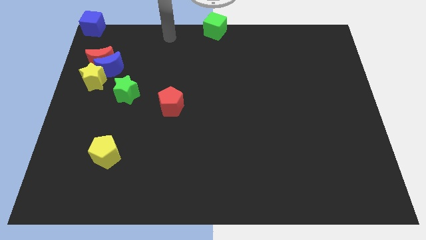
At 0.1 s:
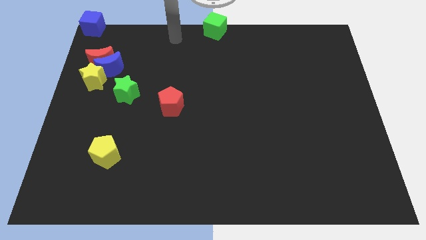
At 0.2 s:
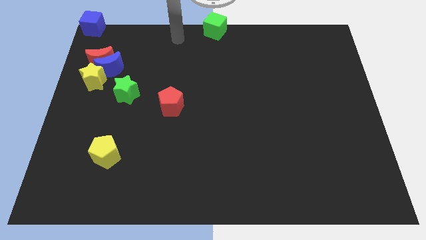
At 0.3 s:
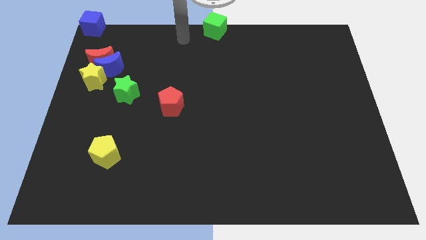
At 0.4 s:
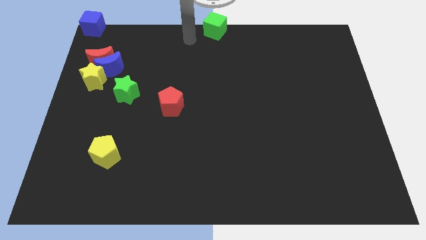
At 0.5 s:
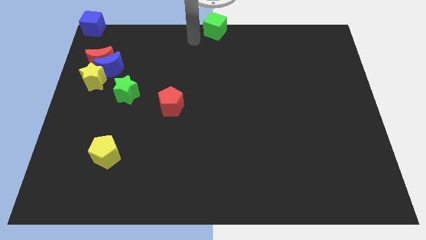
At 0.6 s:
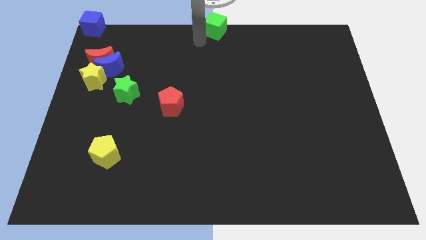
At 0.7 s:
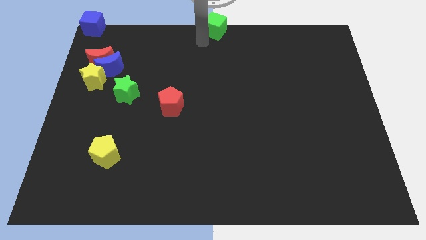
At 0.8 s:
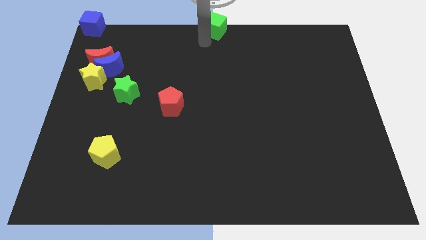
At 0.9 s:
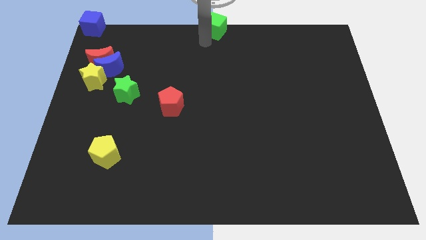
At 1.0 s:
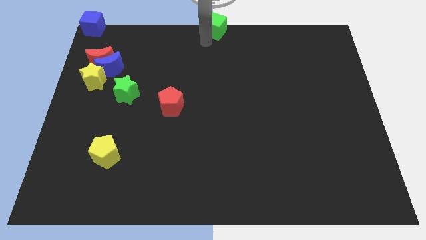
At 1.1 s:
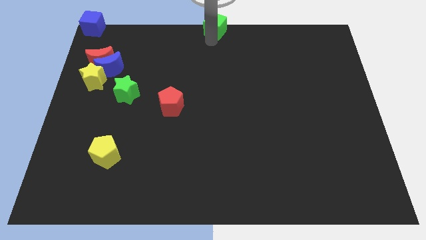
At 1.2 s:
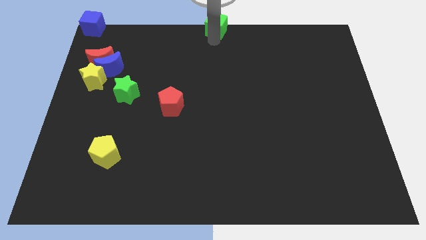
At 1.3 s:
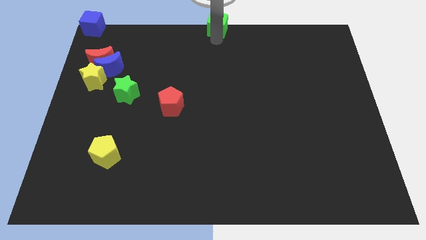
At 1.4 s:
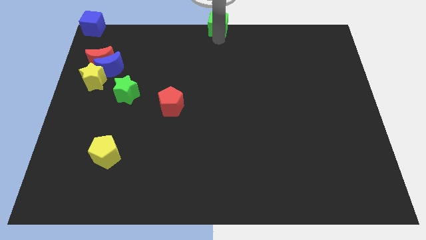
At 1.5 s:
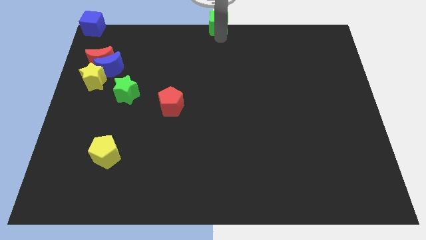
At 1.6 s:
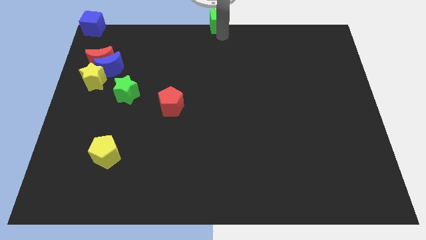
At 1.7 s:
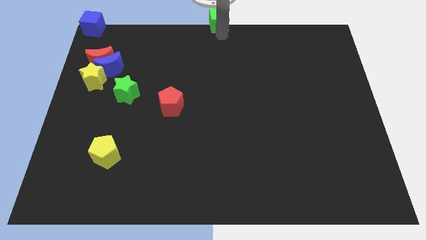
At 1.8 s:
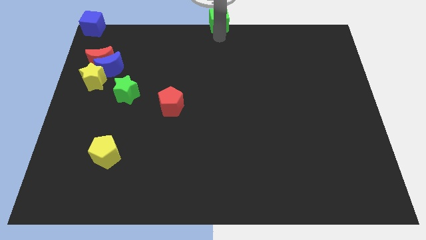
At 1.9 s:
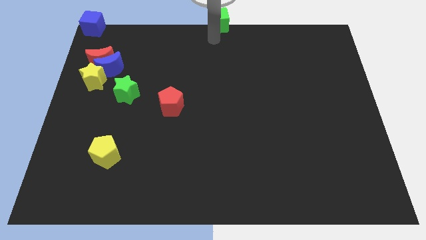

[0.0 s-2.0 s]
touch your arm to the green cube

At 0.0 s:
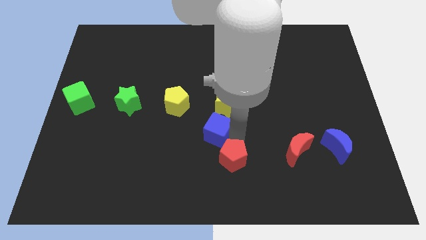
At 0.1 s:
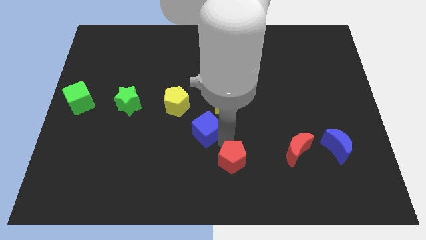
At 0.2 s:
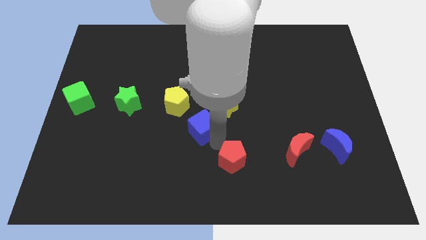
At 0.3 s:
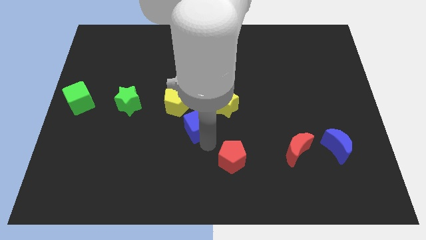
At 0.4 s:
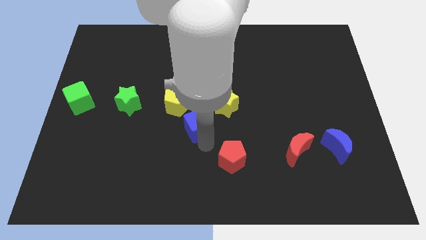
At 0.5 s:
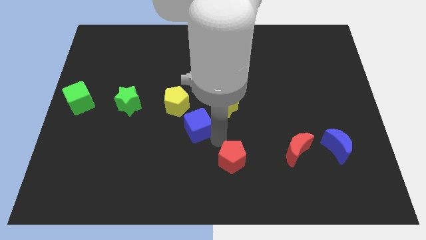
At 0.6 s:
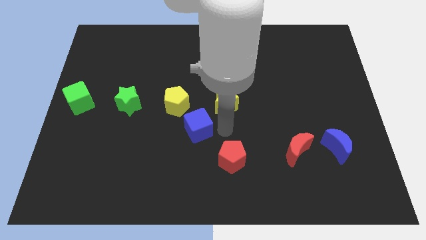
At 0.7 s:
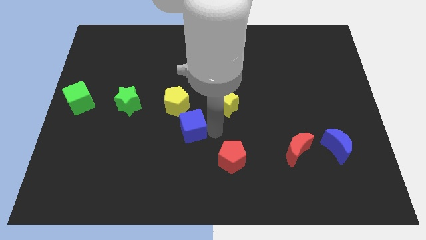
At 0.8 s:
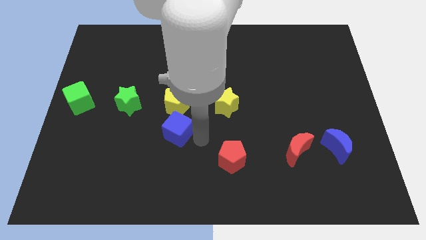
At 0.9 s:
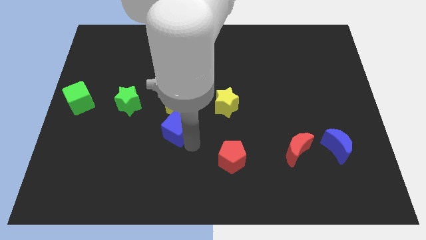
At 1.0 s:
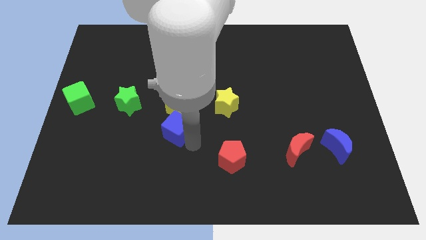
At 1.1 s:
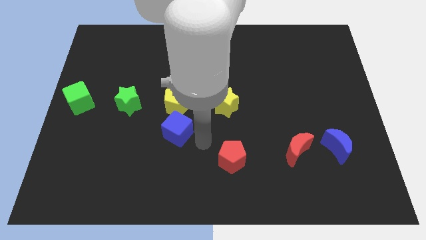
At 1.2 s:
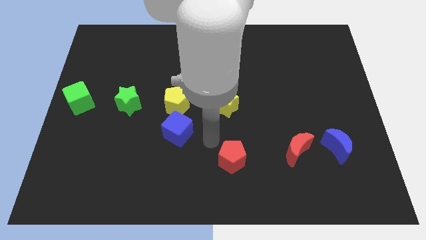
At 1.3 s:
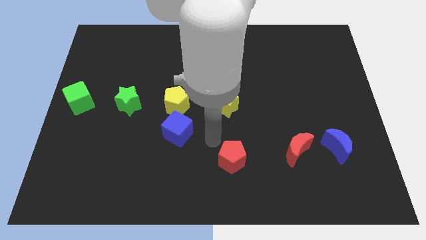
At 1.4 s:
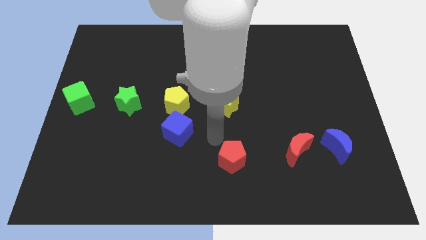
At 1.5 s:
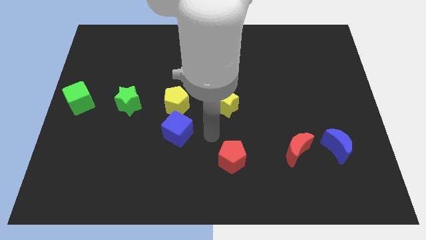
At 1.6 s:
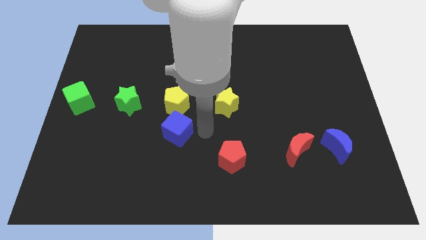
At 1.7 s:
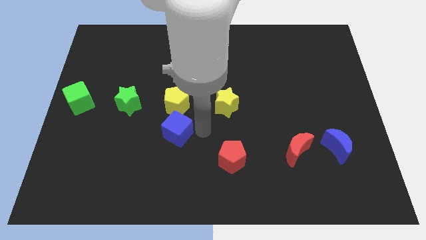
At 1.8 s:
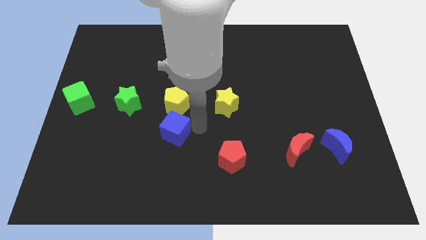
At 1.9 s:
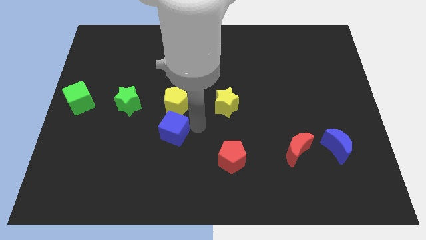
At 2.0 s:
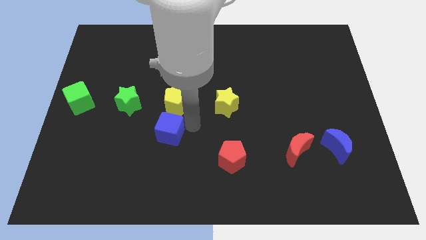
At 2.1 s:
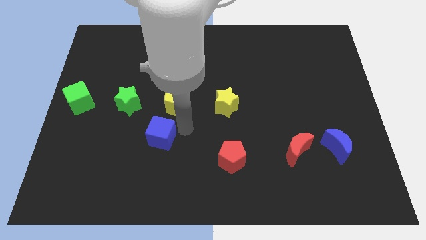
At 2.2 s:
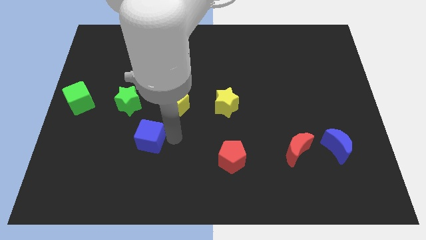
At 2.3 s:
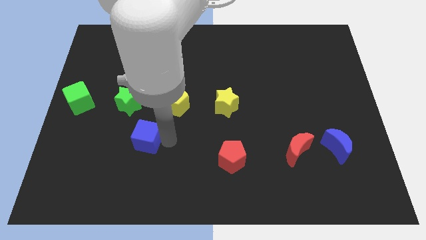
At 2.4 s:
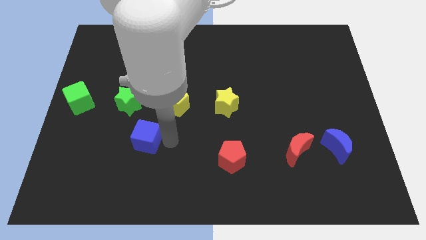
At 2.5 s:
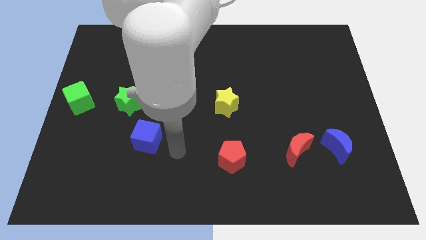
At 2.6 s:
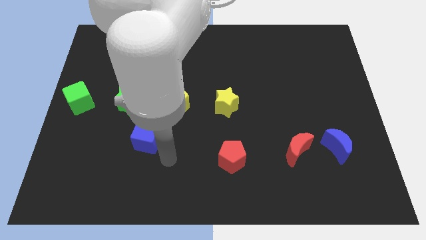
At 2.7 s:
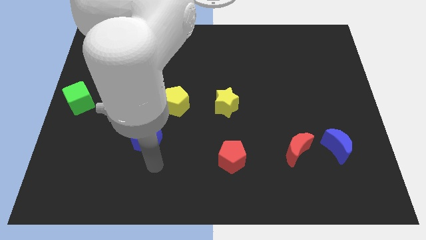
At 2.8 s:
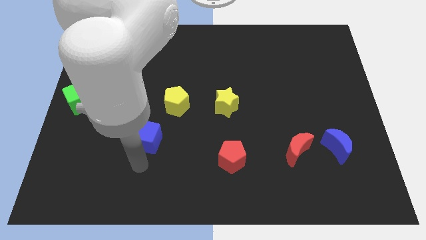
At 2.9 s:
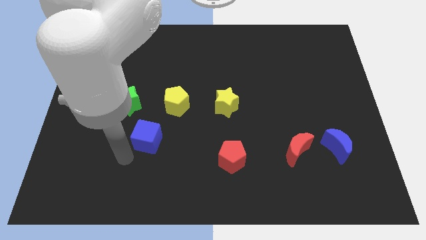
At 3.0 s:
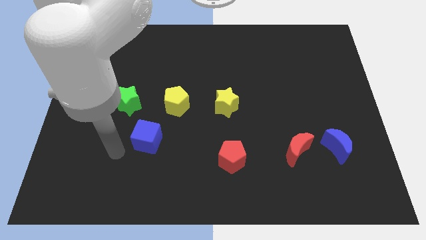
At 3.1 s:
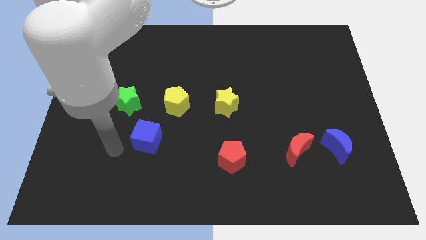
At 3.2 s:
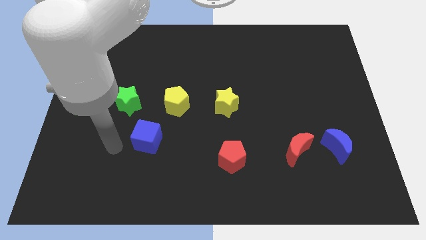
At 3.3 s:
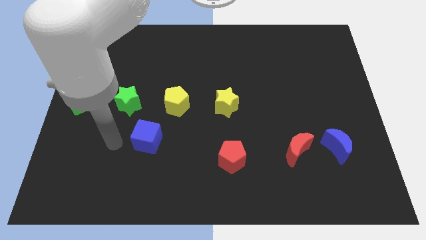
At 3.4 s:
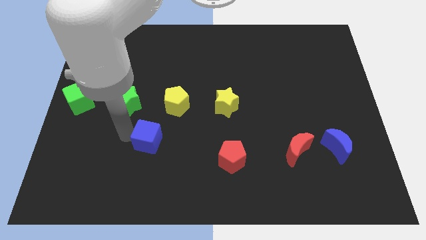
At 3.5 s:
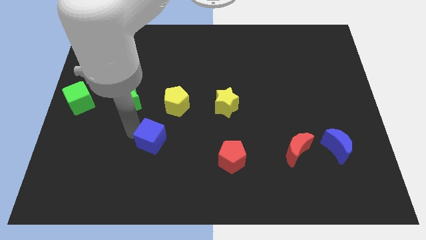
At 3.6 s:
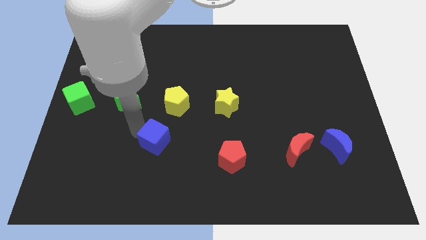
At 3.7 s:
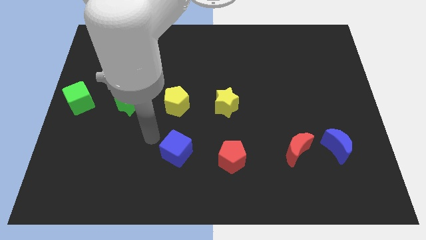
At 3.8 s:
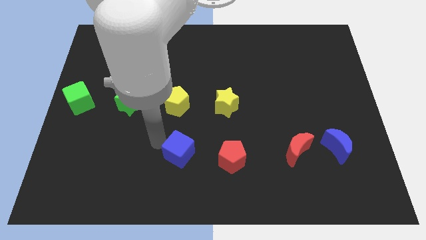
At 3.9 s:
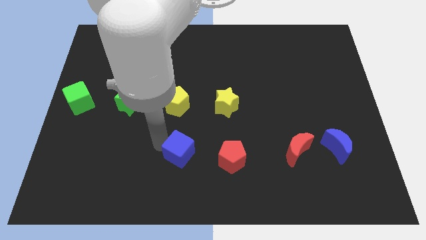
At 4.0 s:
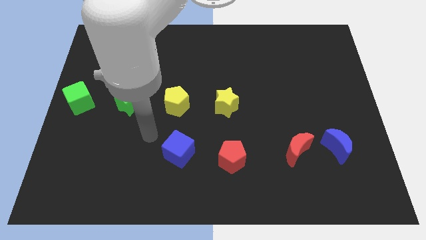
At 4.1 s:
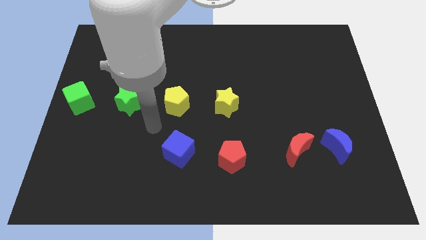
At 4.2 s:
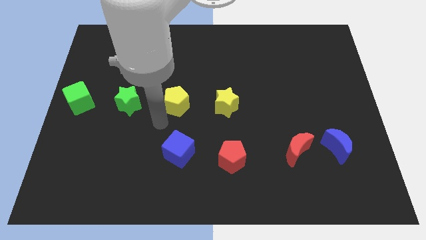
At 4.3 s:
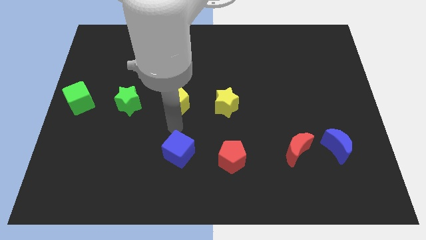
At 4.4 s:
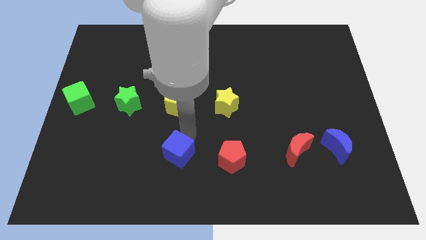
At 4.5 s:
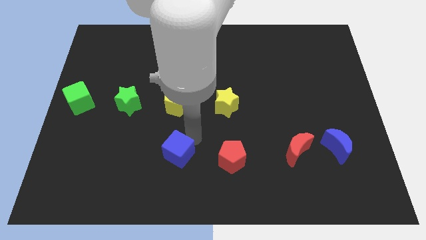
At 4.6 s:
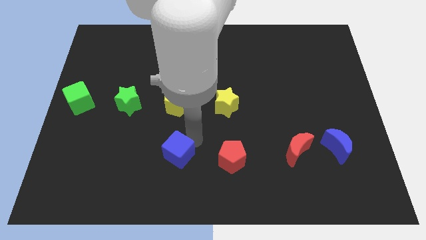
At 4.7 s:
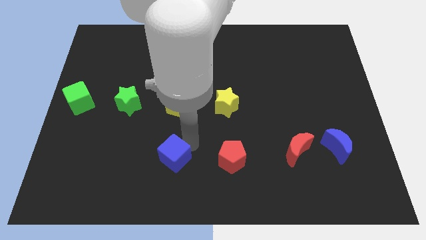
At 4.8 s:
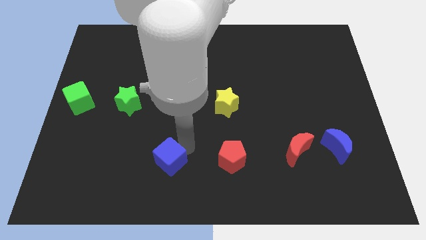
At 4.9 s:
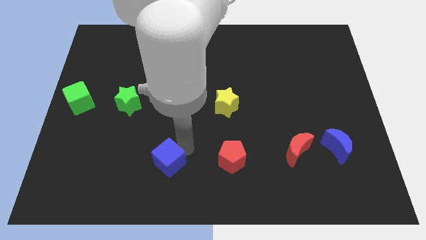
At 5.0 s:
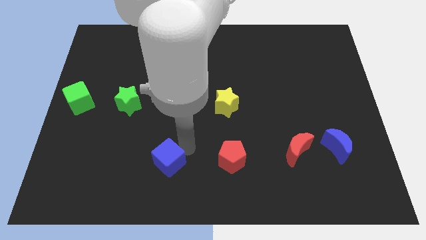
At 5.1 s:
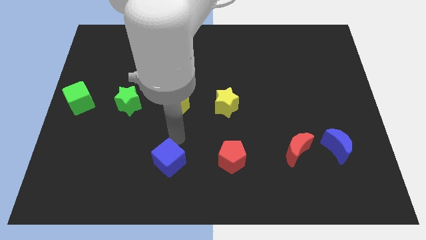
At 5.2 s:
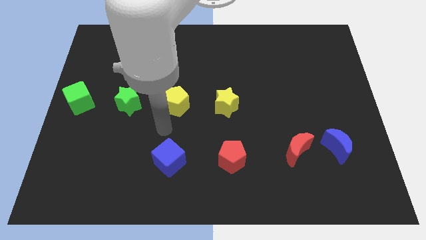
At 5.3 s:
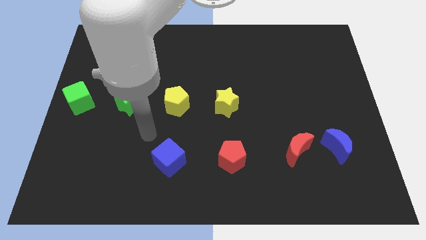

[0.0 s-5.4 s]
place the blue cube to the left of the red pentagon

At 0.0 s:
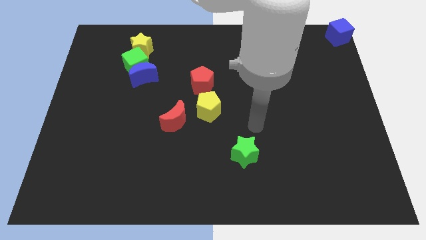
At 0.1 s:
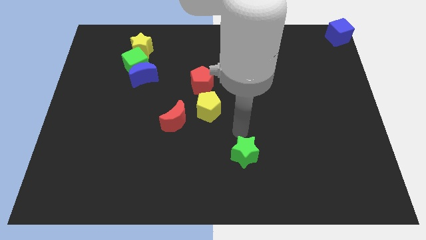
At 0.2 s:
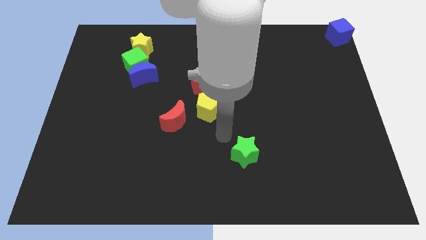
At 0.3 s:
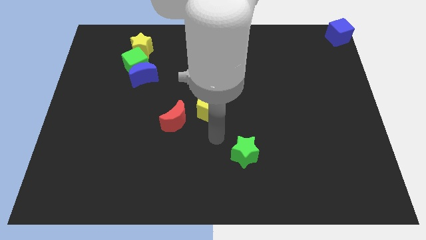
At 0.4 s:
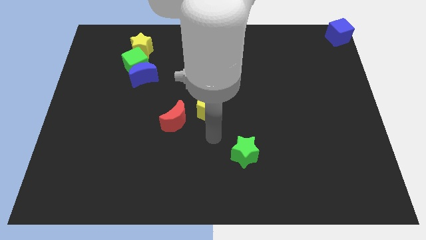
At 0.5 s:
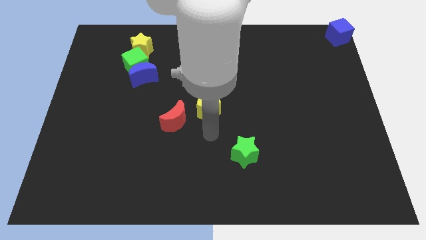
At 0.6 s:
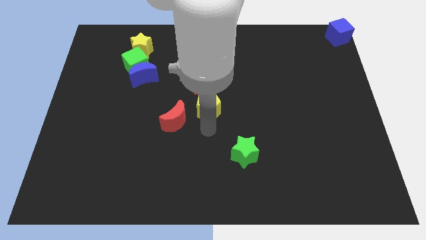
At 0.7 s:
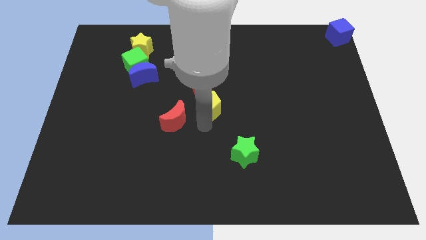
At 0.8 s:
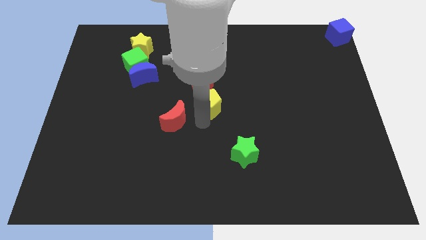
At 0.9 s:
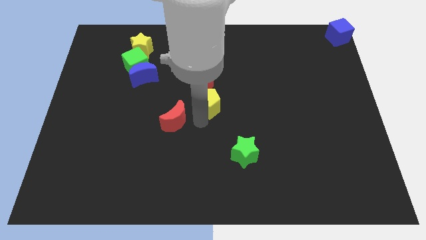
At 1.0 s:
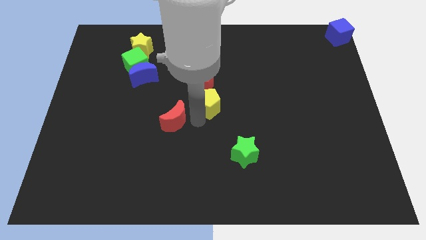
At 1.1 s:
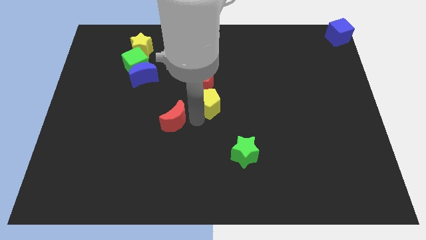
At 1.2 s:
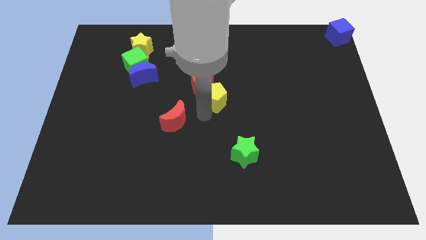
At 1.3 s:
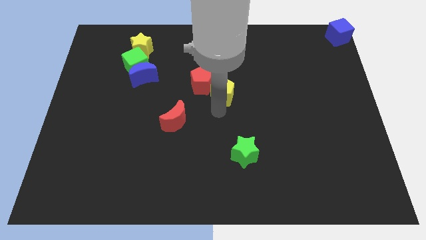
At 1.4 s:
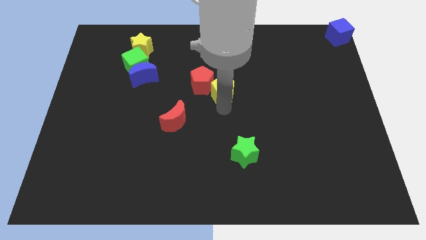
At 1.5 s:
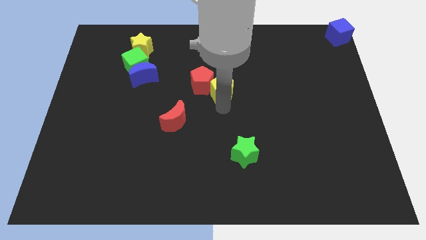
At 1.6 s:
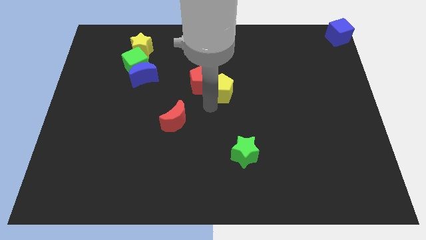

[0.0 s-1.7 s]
move the yellow pentagon towards right to the red pentagon
